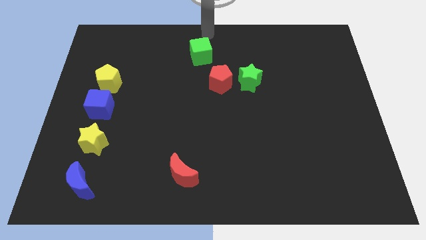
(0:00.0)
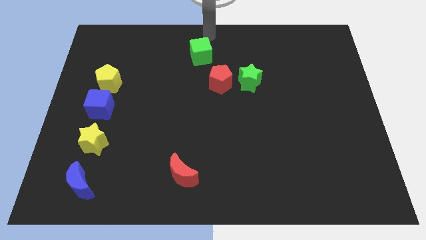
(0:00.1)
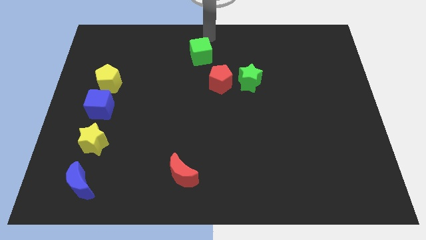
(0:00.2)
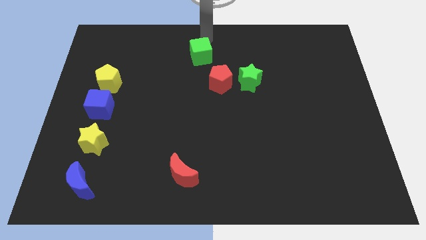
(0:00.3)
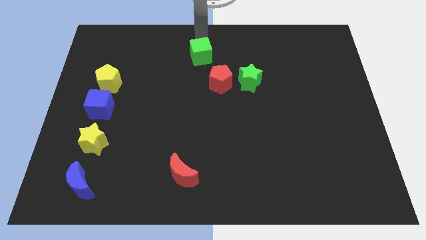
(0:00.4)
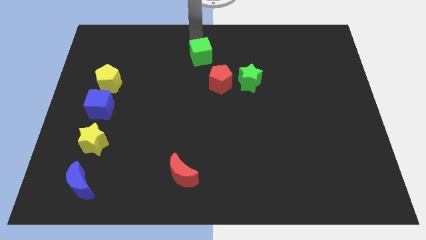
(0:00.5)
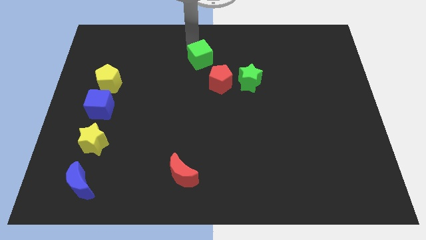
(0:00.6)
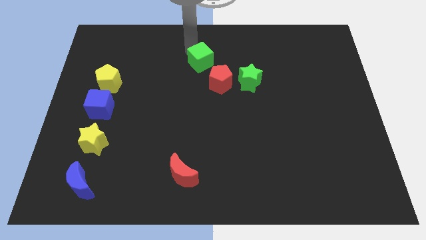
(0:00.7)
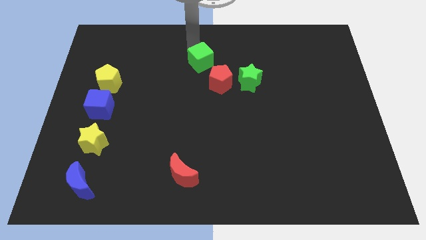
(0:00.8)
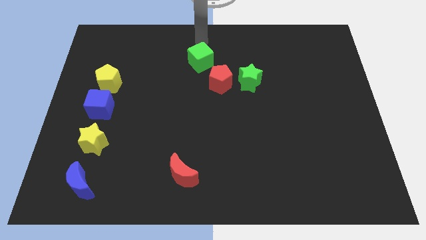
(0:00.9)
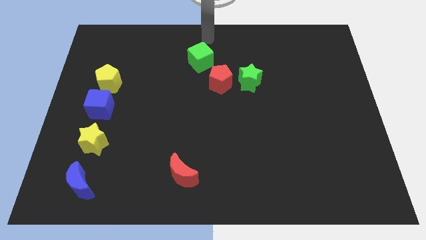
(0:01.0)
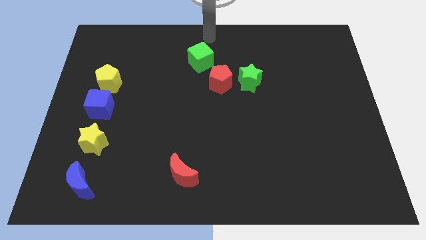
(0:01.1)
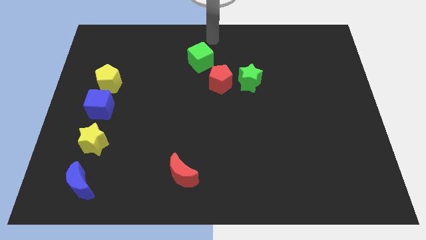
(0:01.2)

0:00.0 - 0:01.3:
slightly push the green cube downward

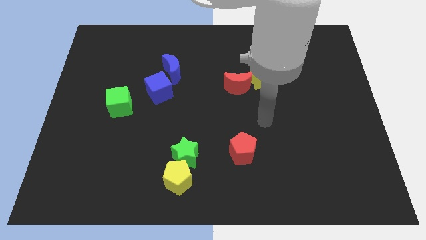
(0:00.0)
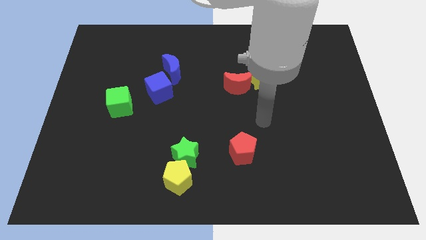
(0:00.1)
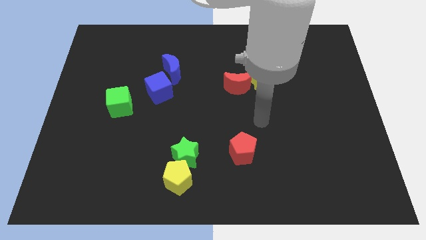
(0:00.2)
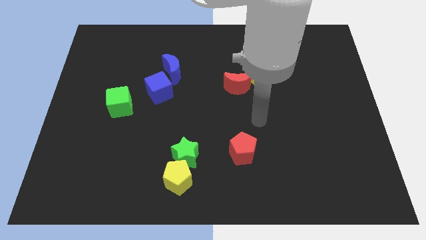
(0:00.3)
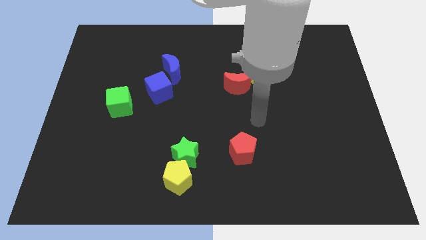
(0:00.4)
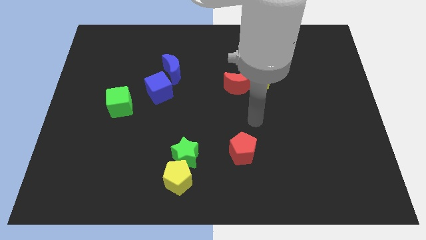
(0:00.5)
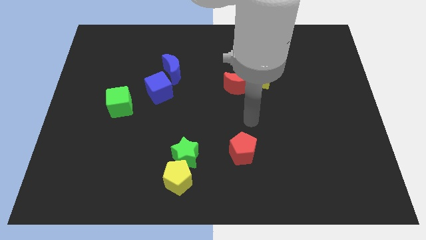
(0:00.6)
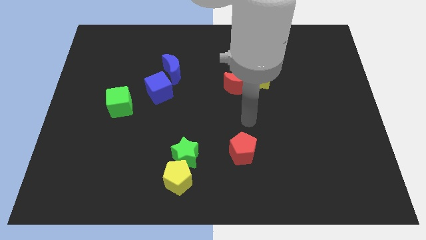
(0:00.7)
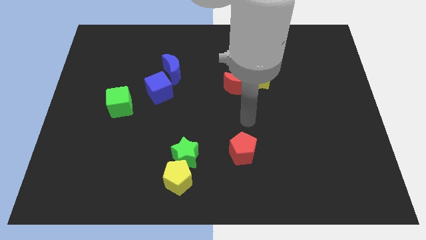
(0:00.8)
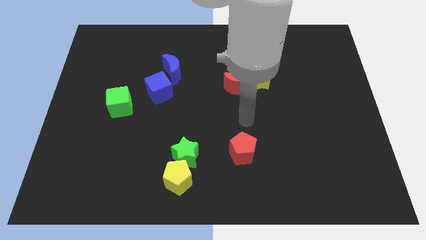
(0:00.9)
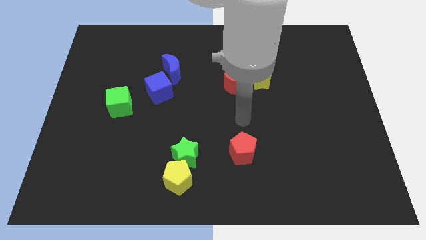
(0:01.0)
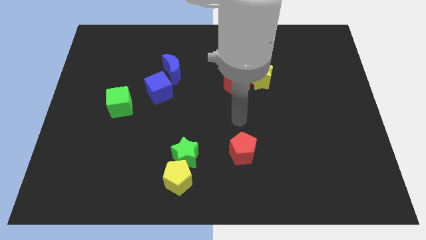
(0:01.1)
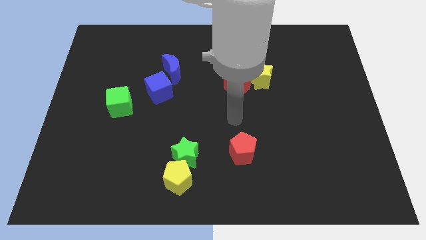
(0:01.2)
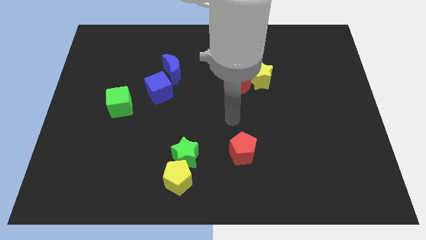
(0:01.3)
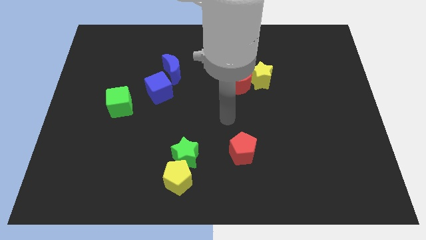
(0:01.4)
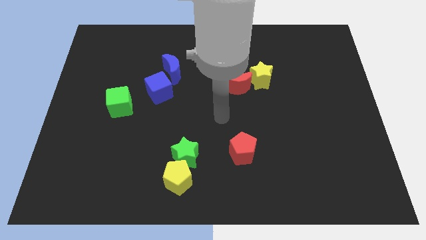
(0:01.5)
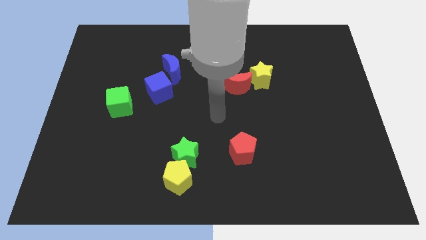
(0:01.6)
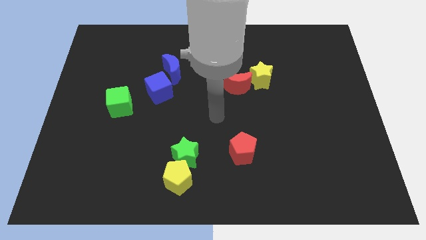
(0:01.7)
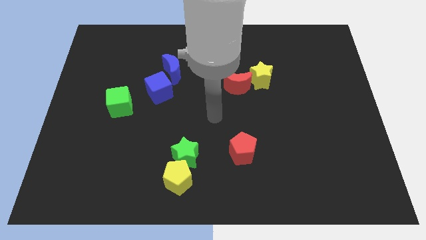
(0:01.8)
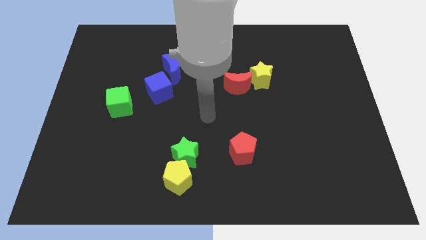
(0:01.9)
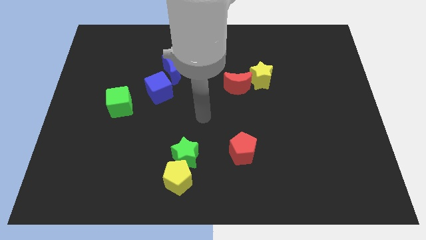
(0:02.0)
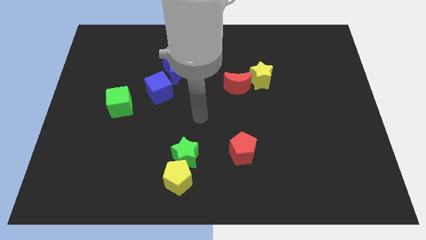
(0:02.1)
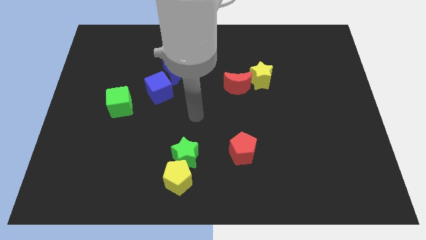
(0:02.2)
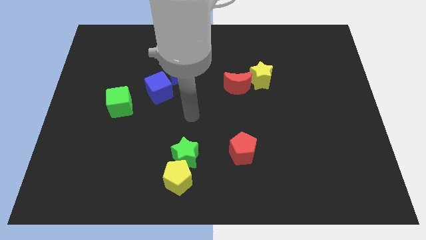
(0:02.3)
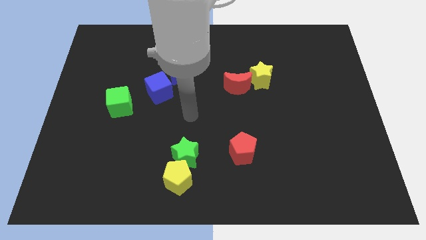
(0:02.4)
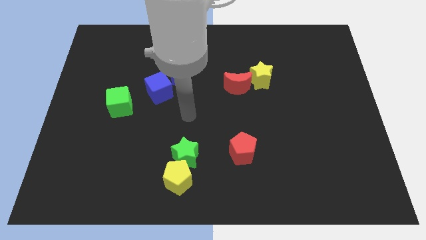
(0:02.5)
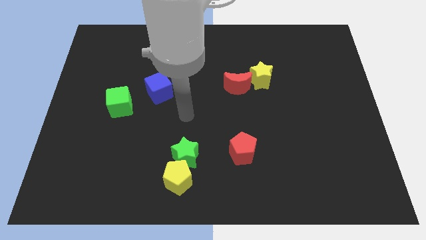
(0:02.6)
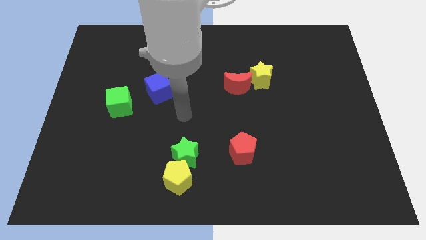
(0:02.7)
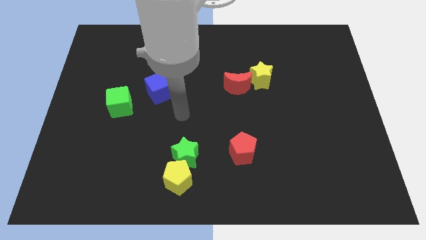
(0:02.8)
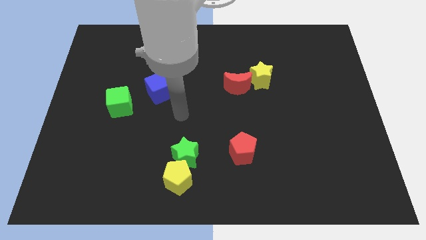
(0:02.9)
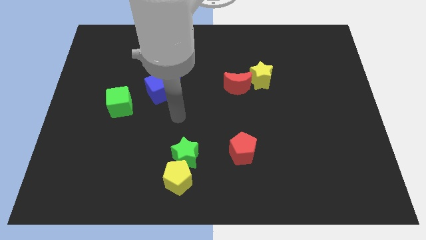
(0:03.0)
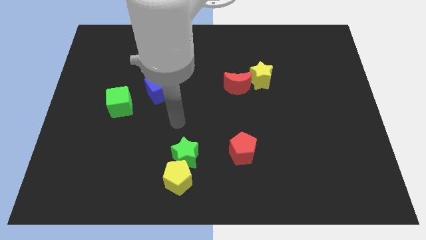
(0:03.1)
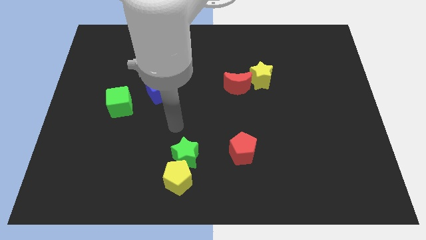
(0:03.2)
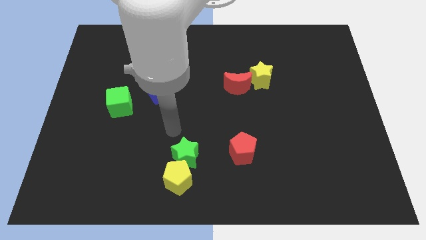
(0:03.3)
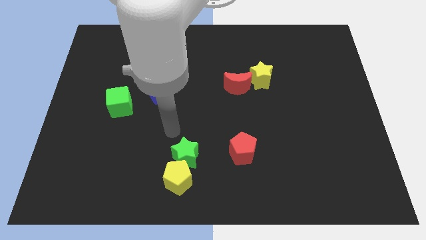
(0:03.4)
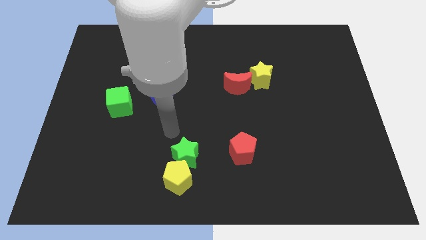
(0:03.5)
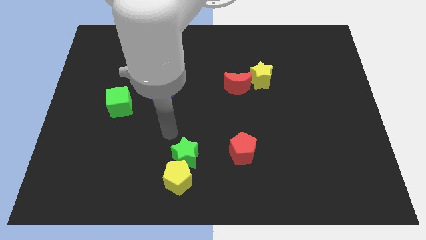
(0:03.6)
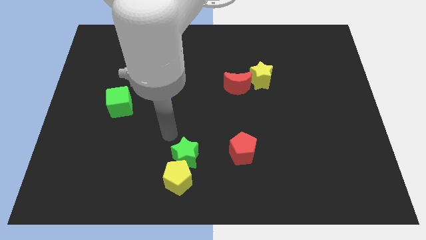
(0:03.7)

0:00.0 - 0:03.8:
place the arm above the green star

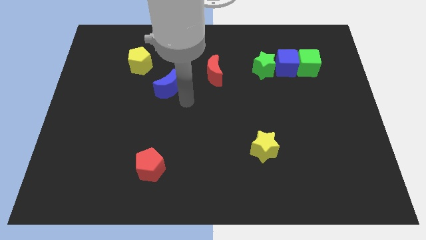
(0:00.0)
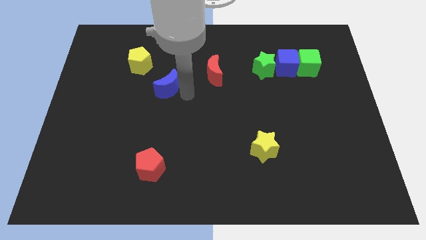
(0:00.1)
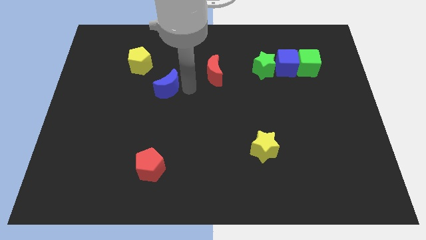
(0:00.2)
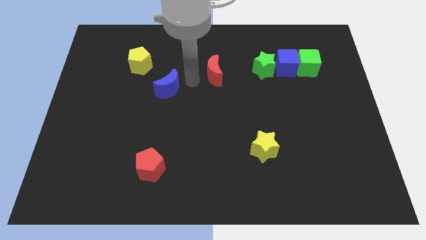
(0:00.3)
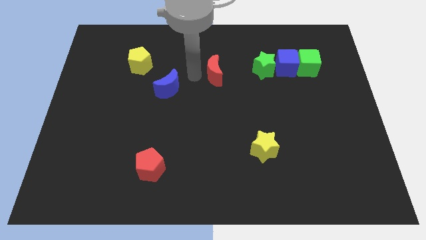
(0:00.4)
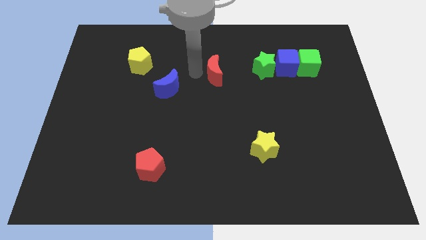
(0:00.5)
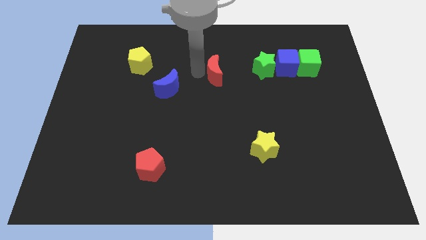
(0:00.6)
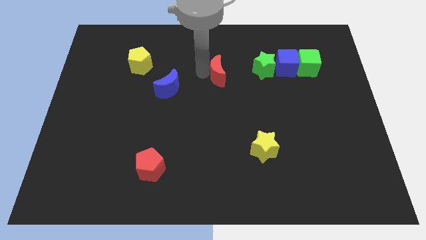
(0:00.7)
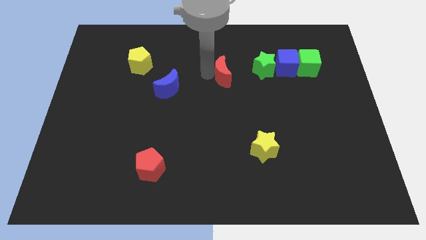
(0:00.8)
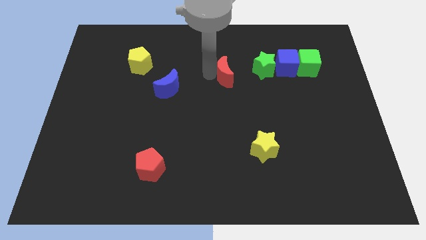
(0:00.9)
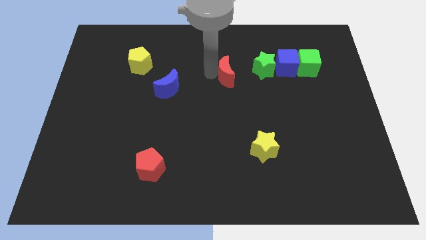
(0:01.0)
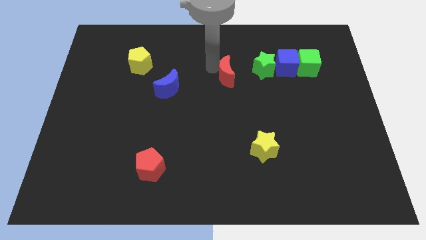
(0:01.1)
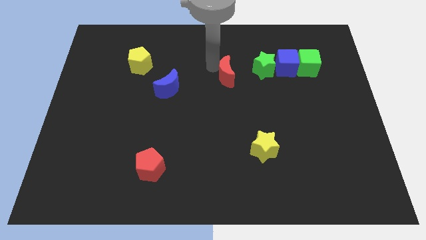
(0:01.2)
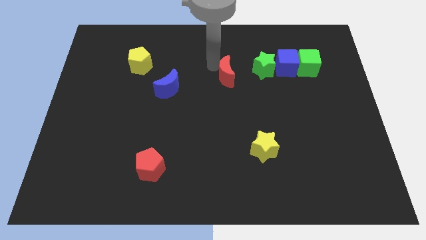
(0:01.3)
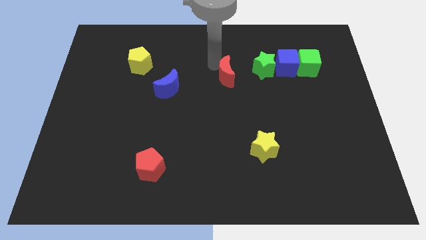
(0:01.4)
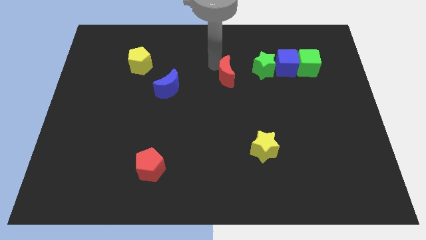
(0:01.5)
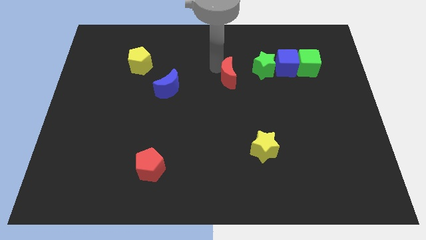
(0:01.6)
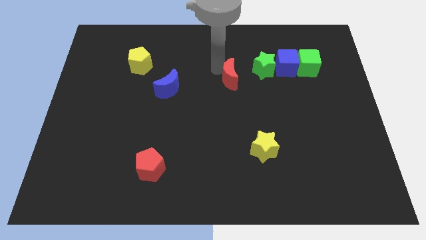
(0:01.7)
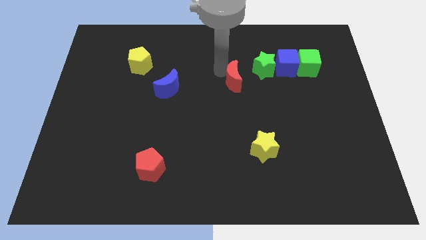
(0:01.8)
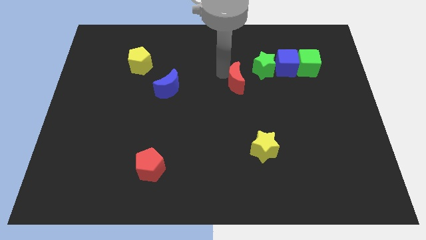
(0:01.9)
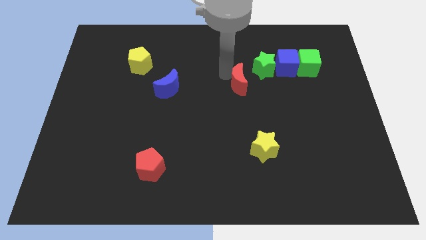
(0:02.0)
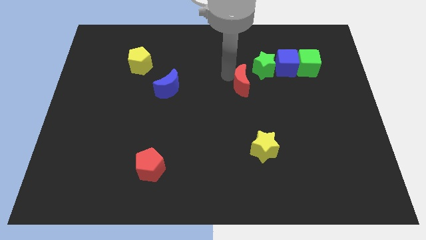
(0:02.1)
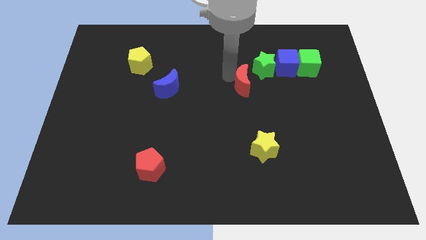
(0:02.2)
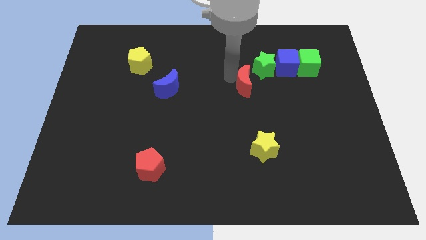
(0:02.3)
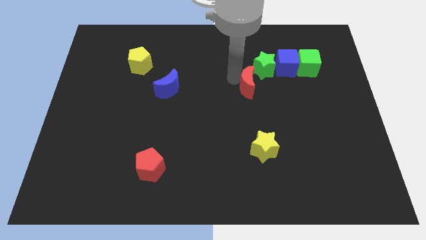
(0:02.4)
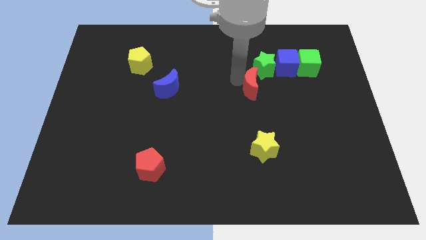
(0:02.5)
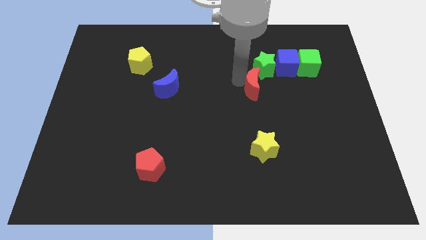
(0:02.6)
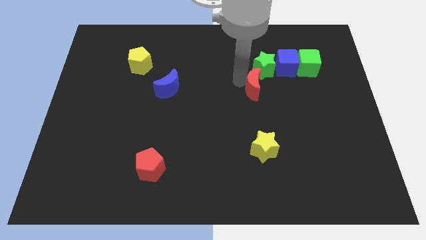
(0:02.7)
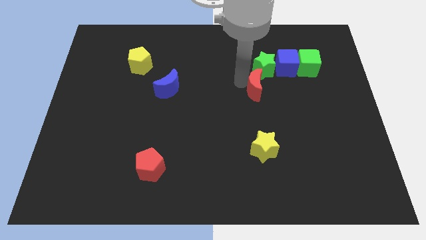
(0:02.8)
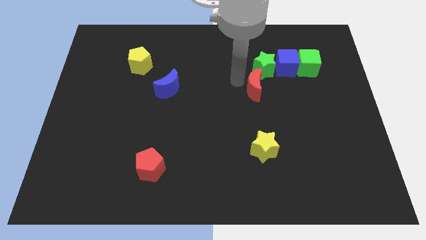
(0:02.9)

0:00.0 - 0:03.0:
push the red crescent to the bottom of the green star

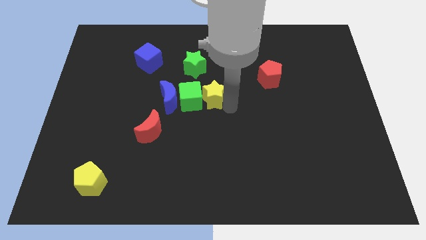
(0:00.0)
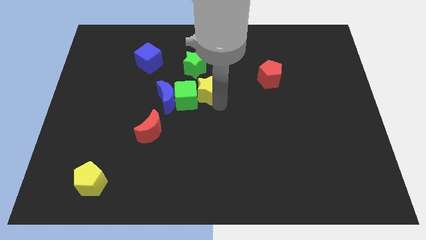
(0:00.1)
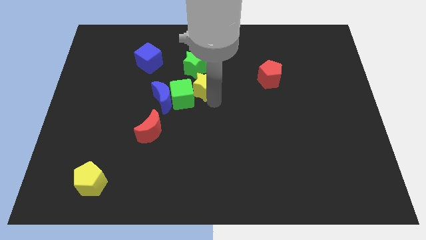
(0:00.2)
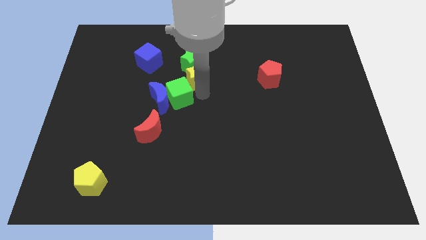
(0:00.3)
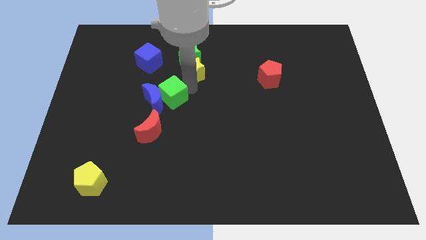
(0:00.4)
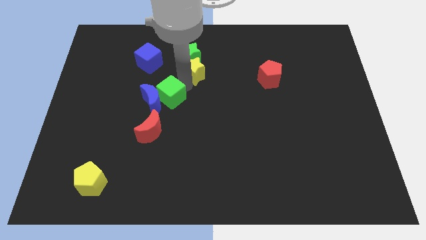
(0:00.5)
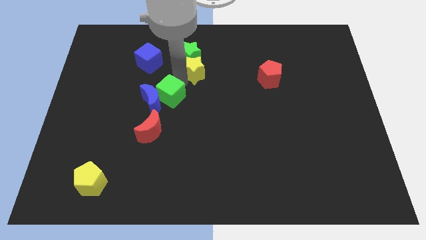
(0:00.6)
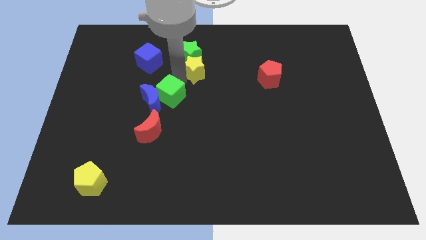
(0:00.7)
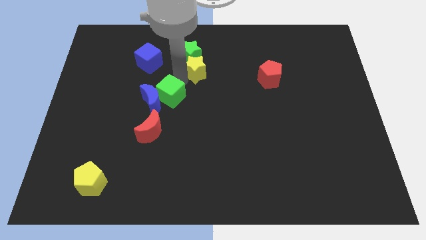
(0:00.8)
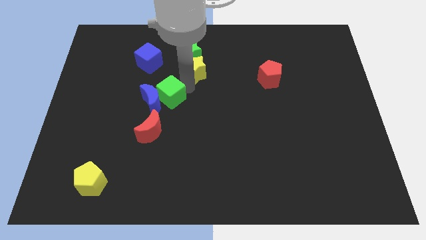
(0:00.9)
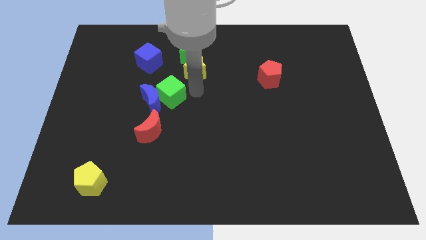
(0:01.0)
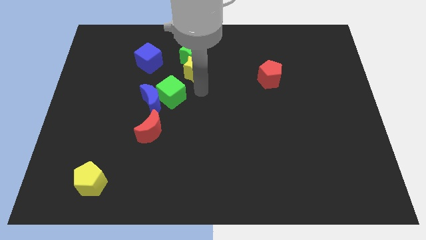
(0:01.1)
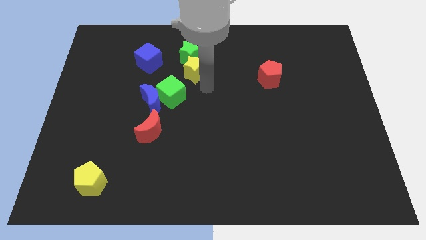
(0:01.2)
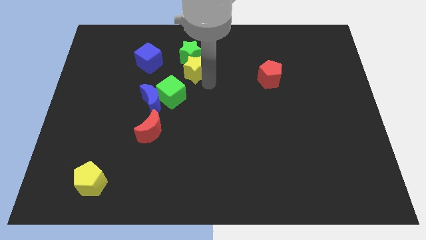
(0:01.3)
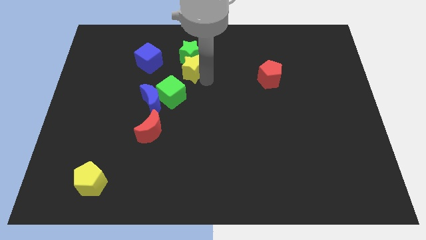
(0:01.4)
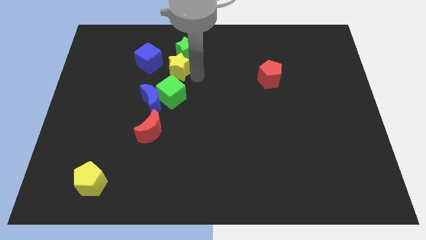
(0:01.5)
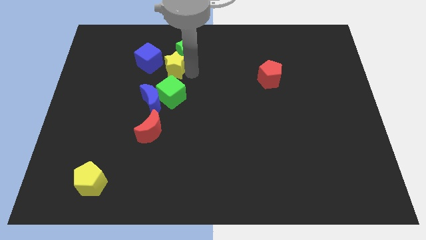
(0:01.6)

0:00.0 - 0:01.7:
push the yellow star between green blocks
